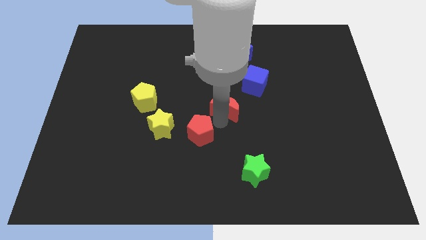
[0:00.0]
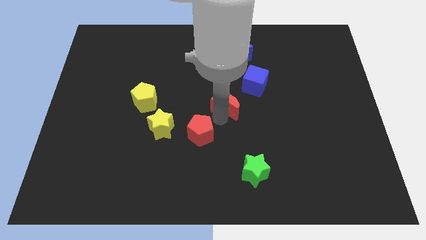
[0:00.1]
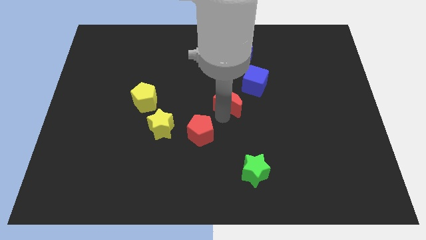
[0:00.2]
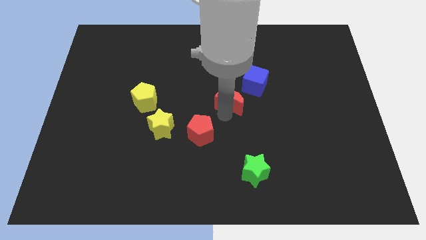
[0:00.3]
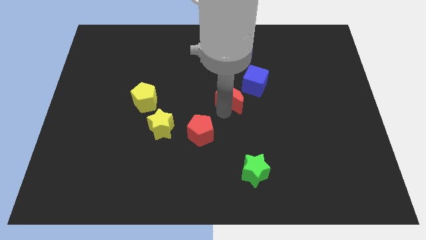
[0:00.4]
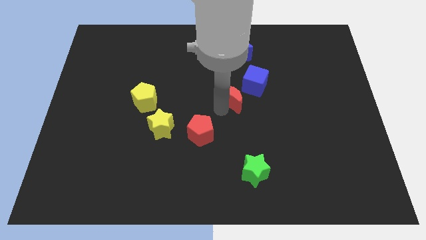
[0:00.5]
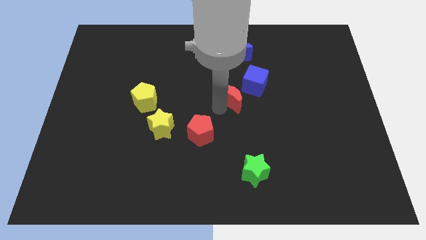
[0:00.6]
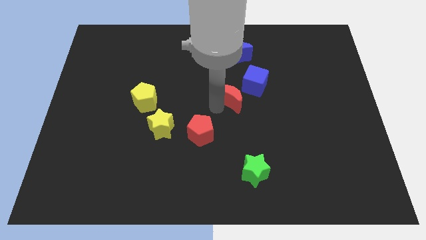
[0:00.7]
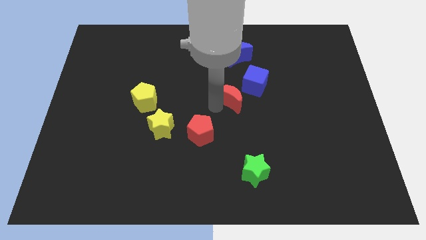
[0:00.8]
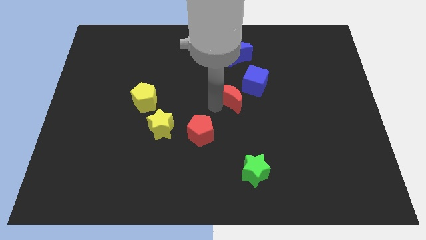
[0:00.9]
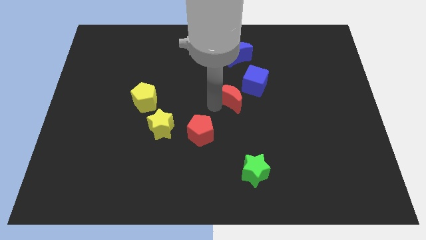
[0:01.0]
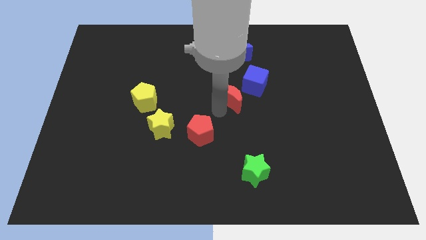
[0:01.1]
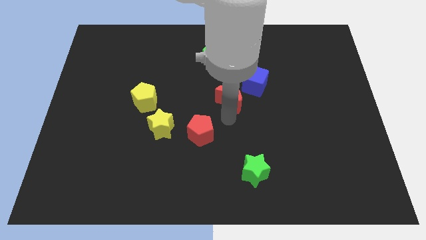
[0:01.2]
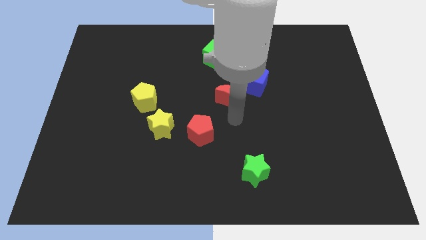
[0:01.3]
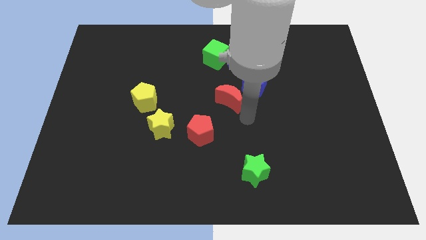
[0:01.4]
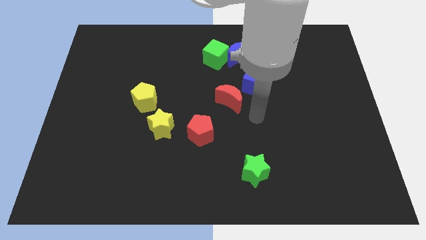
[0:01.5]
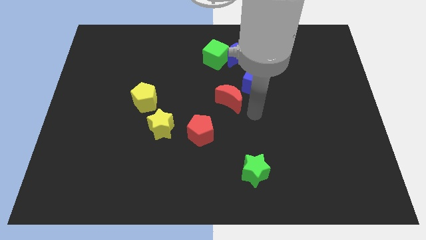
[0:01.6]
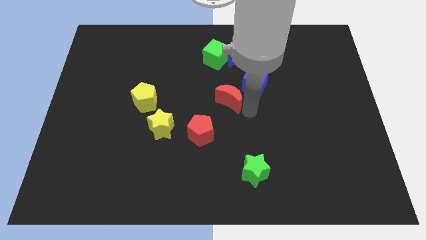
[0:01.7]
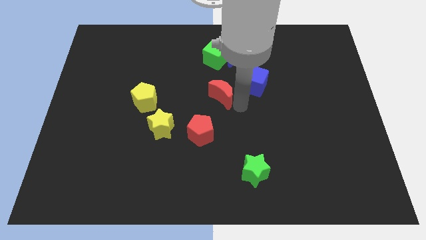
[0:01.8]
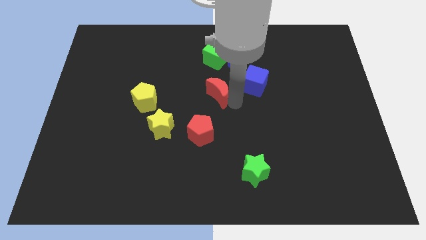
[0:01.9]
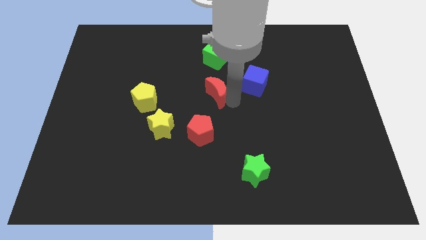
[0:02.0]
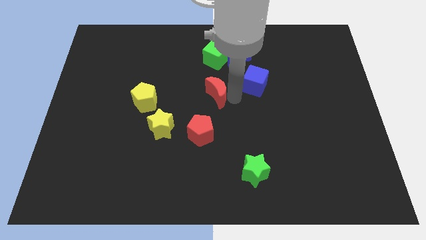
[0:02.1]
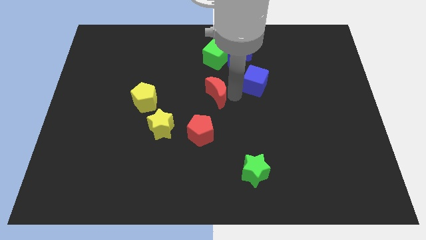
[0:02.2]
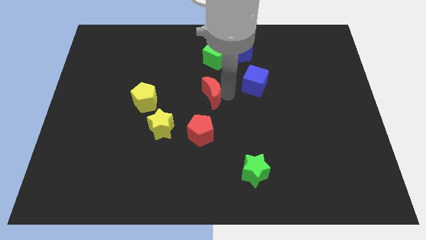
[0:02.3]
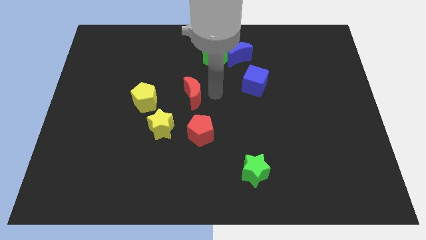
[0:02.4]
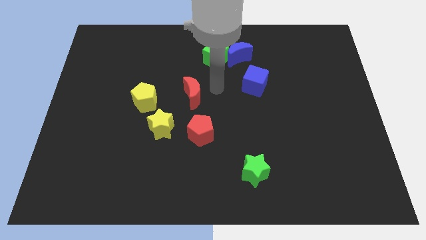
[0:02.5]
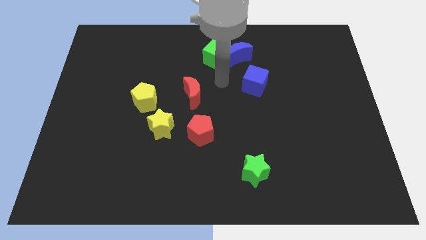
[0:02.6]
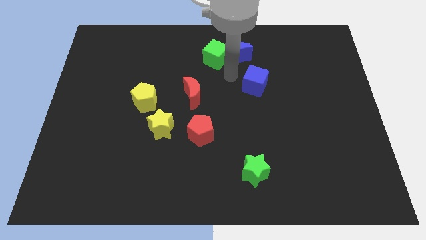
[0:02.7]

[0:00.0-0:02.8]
place the red moon in between yellow pentagon and blue cube

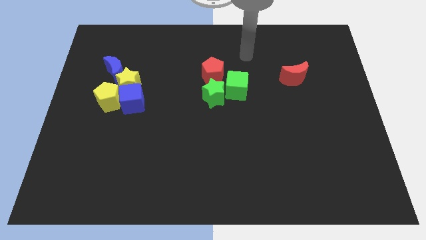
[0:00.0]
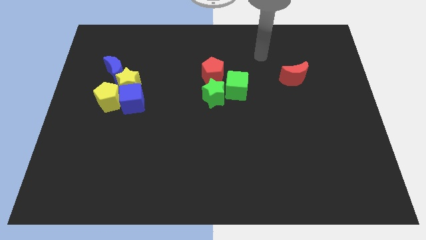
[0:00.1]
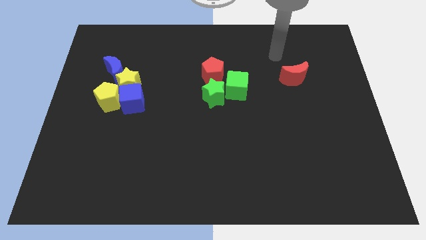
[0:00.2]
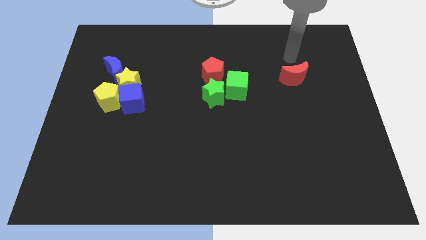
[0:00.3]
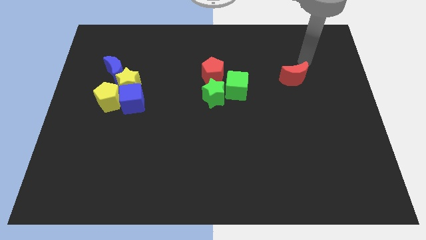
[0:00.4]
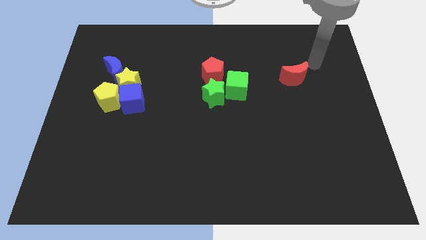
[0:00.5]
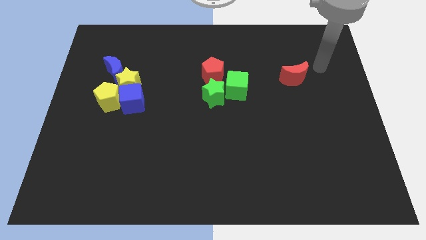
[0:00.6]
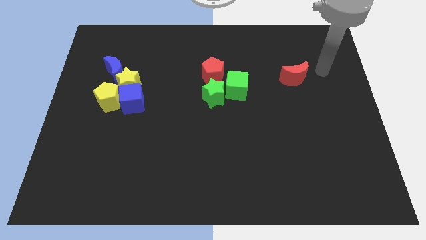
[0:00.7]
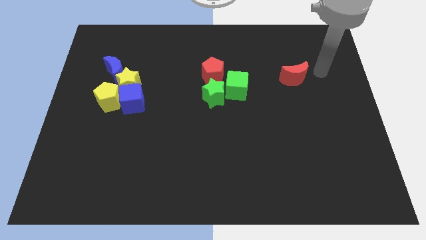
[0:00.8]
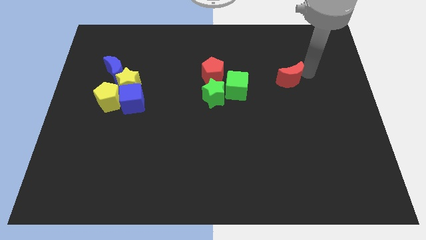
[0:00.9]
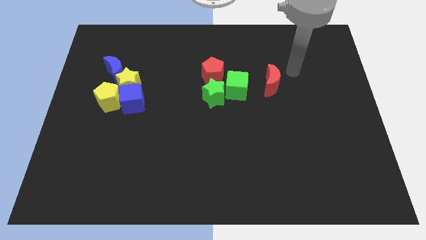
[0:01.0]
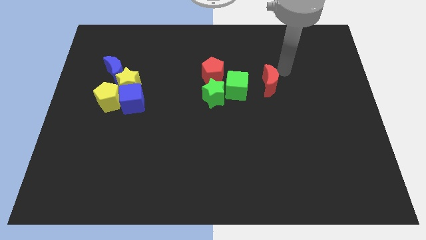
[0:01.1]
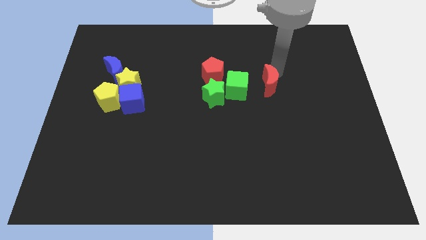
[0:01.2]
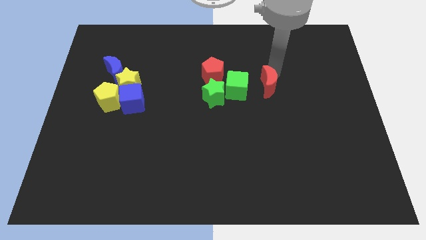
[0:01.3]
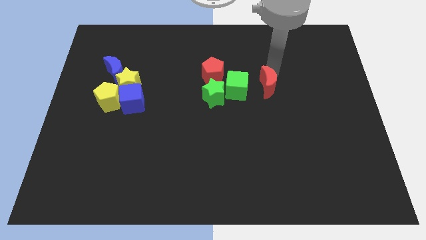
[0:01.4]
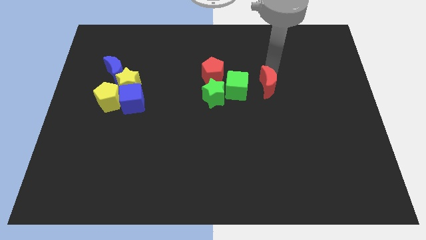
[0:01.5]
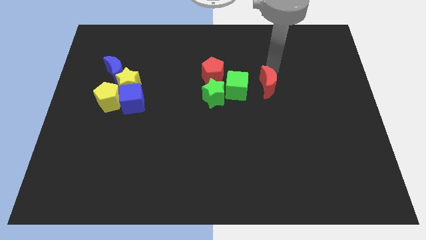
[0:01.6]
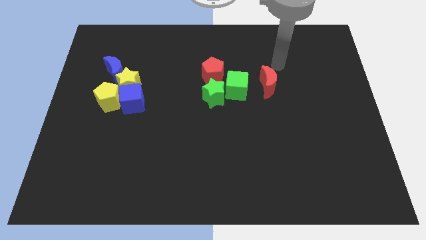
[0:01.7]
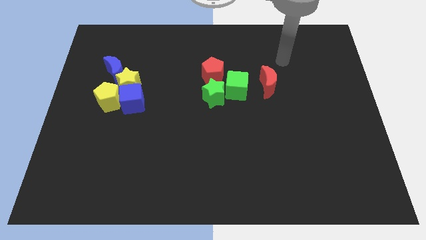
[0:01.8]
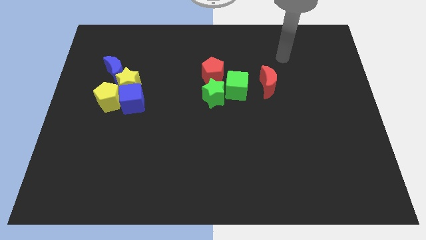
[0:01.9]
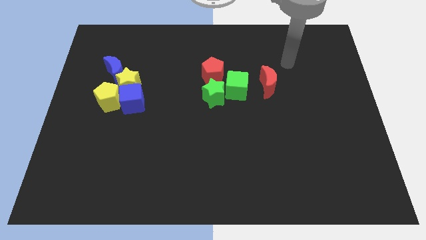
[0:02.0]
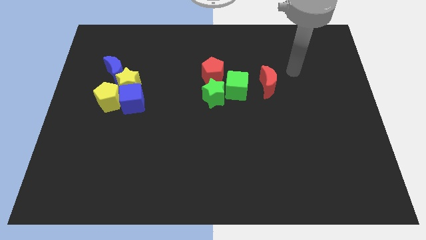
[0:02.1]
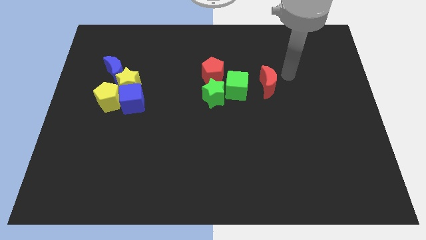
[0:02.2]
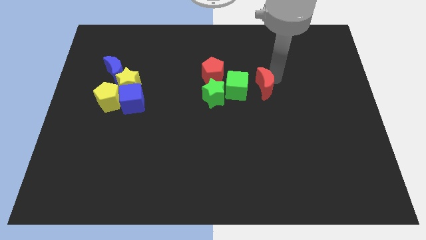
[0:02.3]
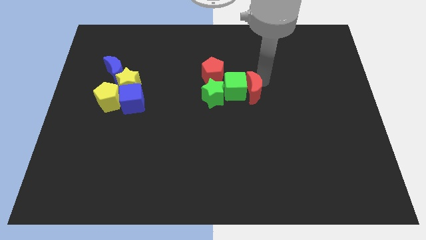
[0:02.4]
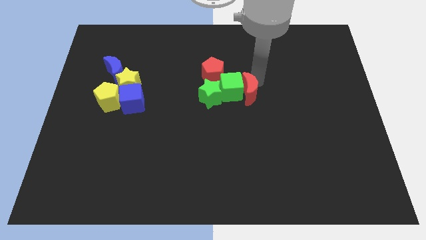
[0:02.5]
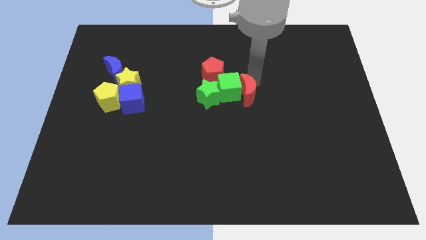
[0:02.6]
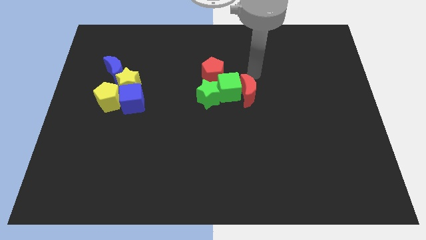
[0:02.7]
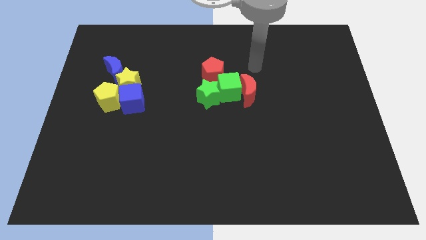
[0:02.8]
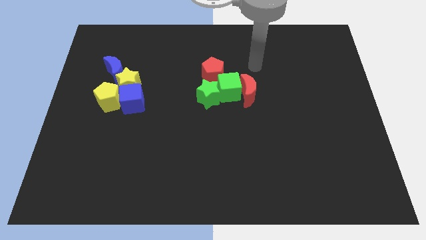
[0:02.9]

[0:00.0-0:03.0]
push the red moon into the group of both the green blocks and the red pentagon

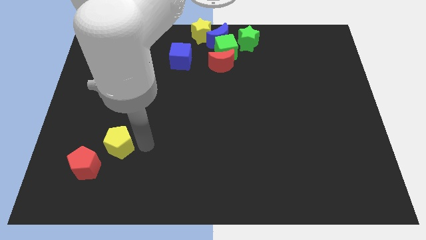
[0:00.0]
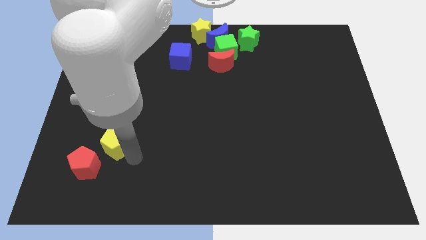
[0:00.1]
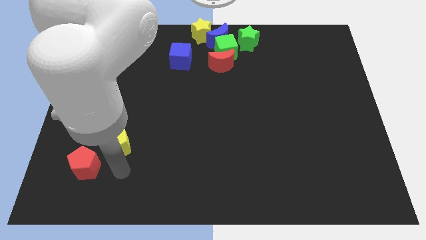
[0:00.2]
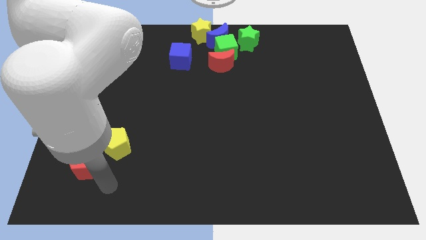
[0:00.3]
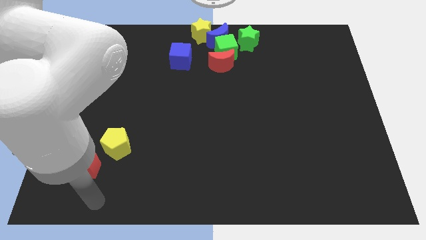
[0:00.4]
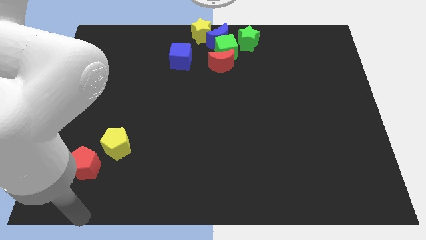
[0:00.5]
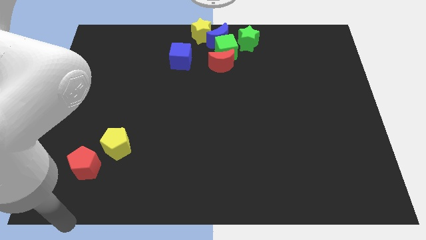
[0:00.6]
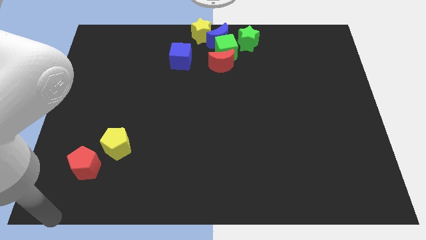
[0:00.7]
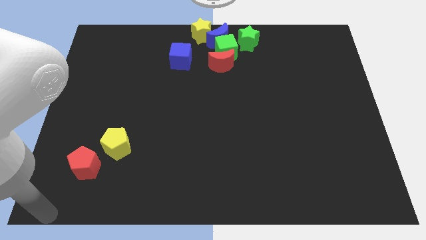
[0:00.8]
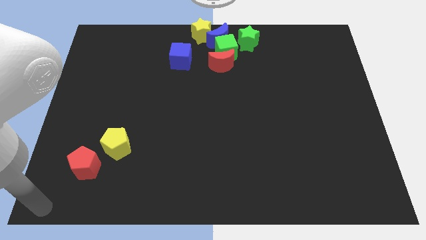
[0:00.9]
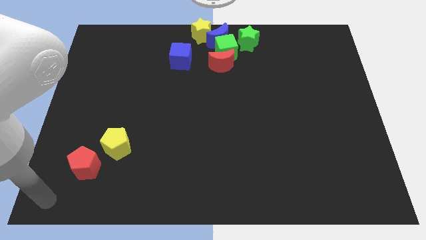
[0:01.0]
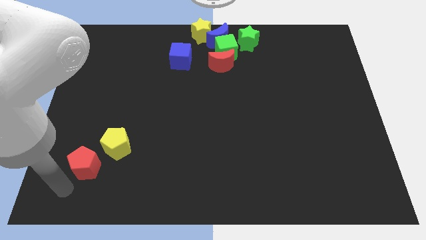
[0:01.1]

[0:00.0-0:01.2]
place the arm to the bottom left corner

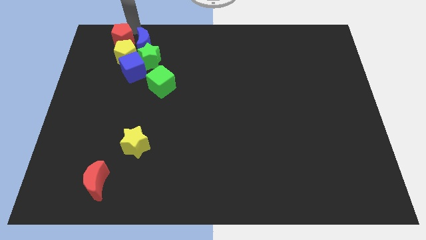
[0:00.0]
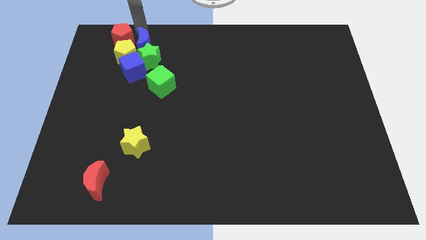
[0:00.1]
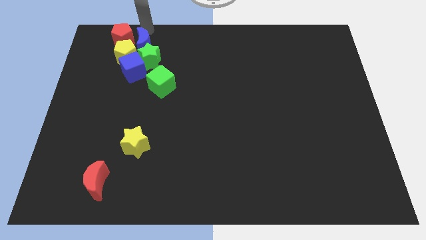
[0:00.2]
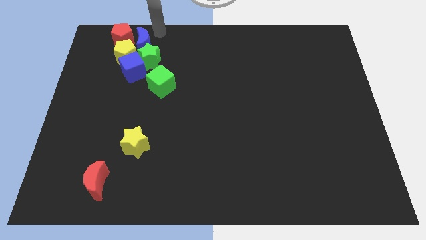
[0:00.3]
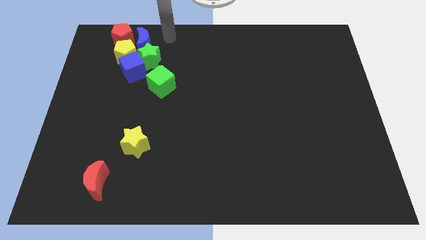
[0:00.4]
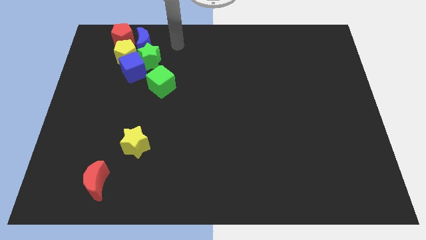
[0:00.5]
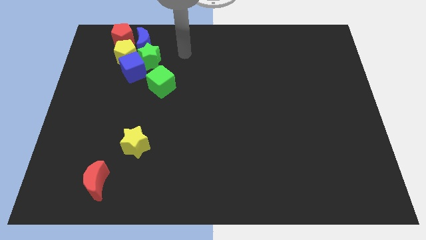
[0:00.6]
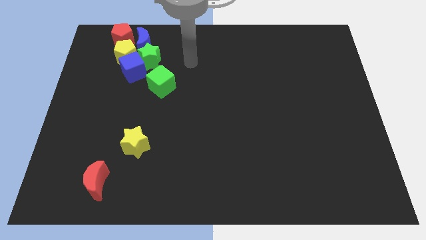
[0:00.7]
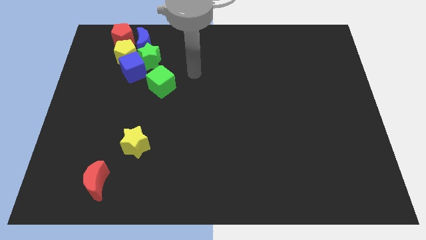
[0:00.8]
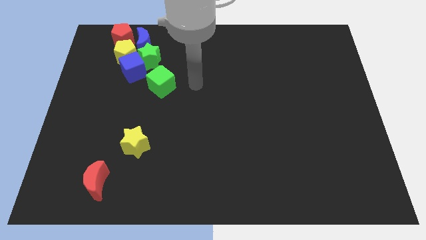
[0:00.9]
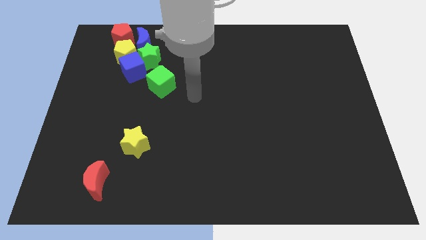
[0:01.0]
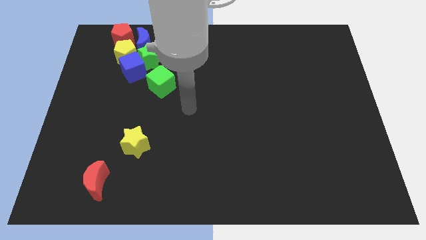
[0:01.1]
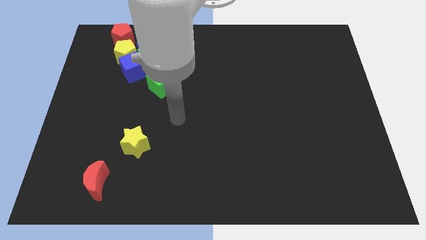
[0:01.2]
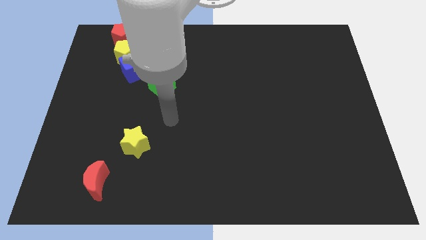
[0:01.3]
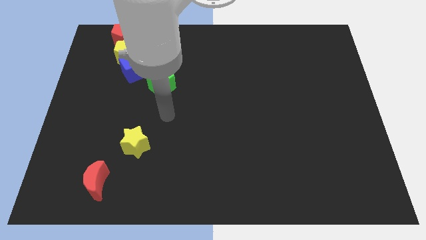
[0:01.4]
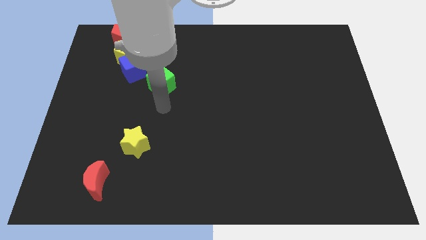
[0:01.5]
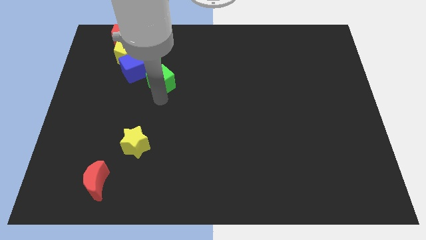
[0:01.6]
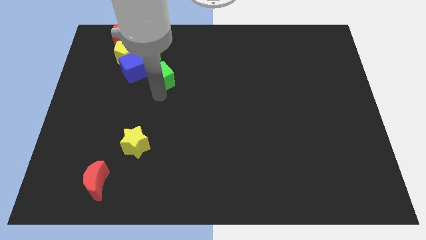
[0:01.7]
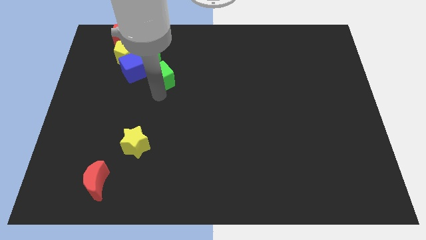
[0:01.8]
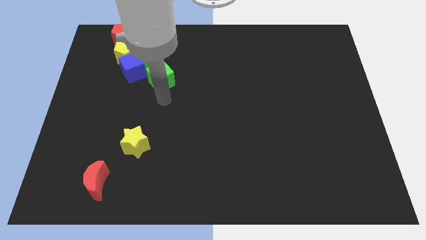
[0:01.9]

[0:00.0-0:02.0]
move your arm away from the red pentagon
